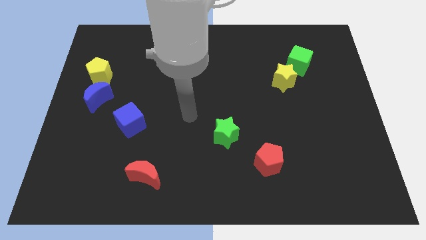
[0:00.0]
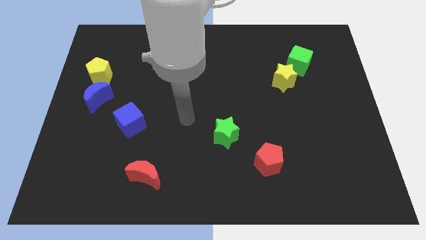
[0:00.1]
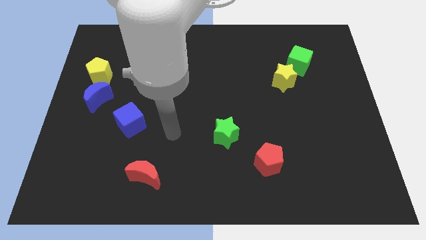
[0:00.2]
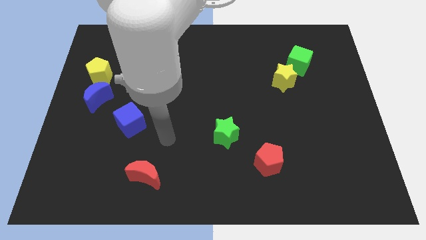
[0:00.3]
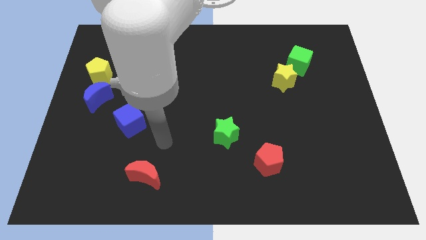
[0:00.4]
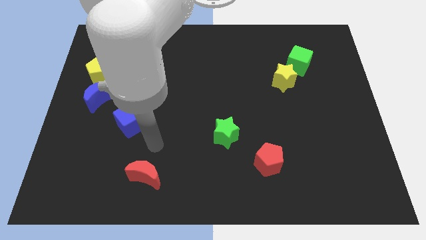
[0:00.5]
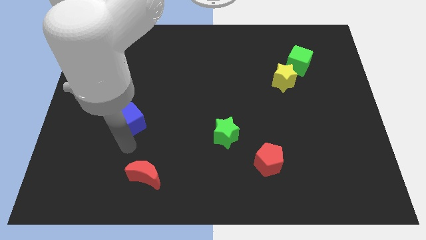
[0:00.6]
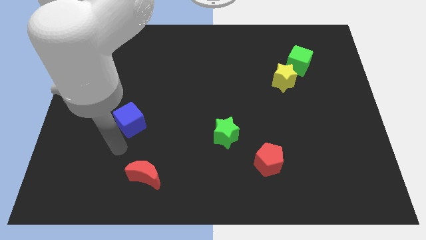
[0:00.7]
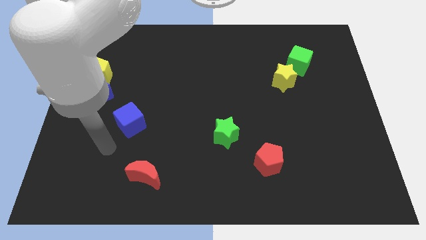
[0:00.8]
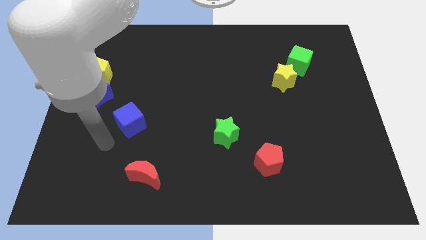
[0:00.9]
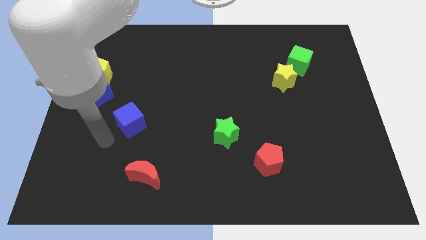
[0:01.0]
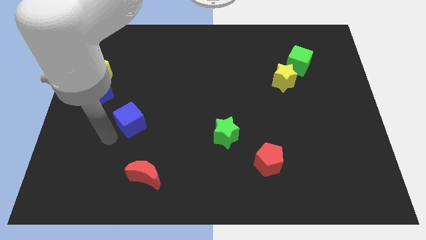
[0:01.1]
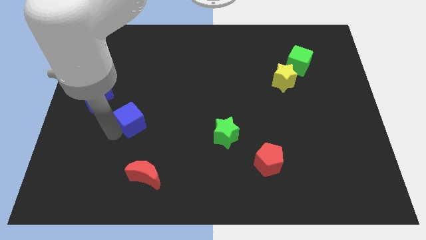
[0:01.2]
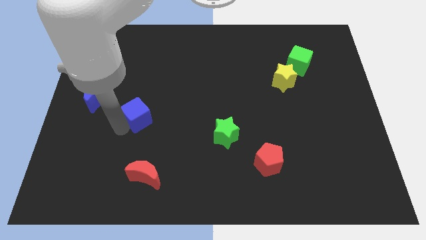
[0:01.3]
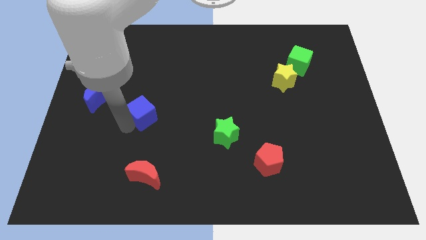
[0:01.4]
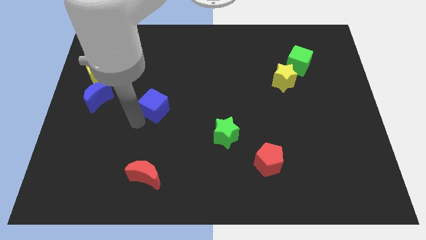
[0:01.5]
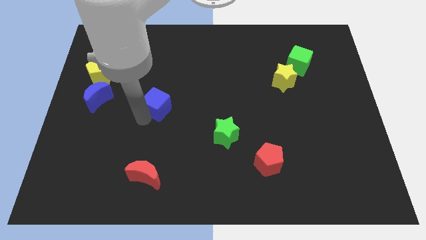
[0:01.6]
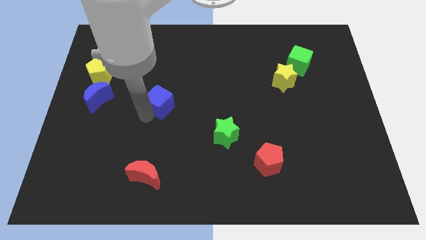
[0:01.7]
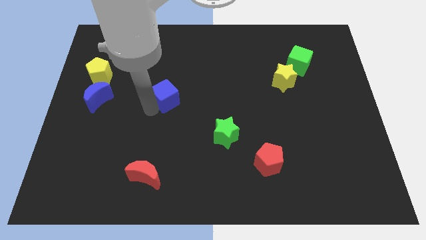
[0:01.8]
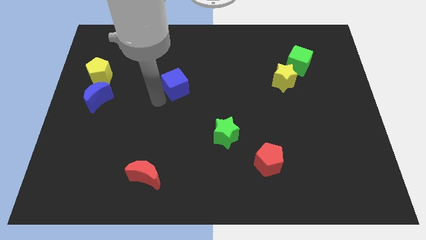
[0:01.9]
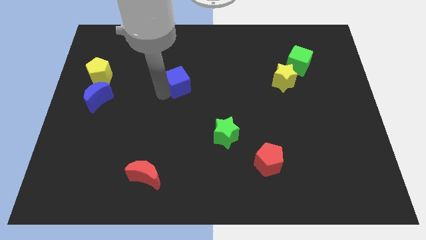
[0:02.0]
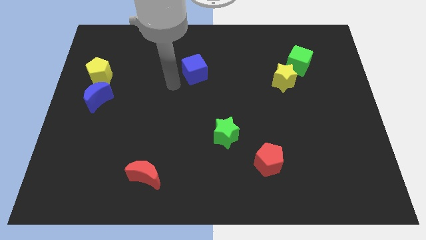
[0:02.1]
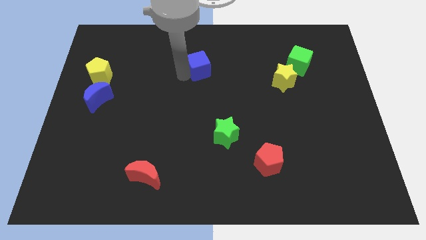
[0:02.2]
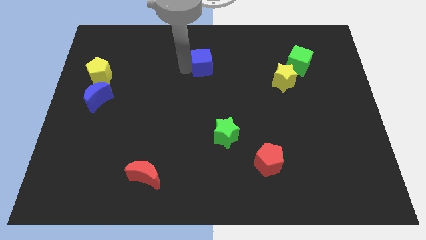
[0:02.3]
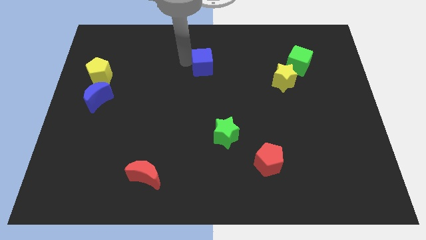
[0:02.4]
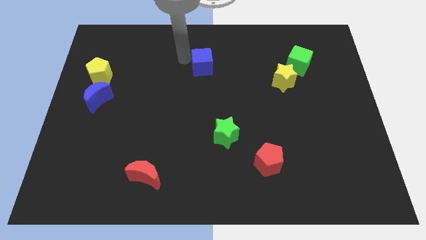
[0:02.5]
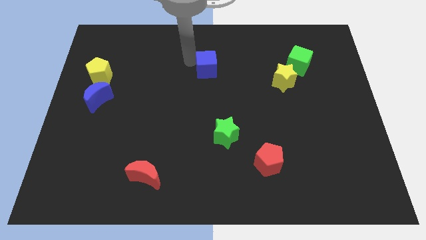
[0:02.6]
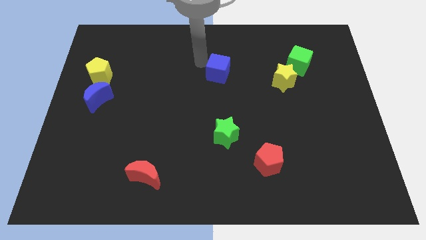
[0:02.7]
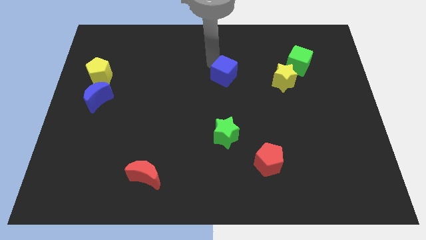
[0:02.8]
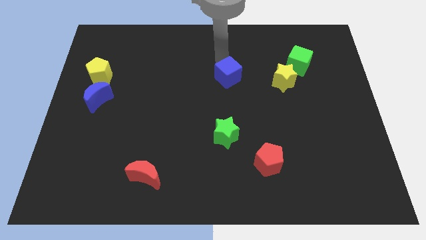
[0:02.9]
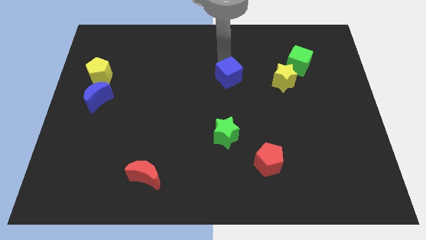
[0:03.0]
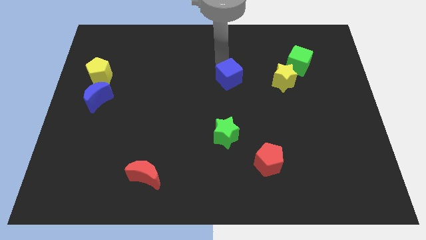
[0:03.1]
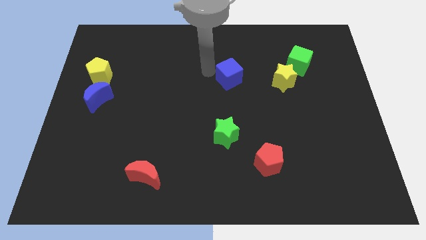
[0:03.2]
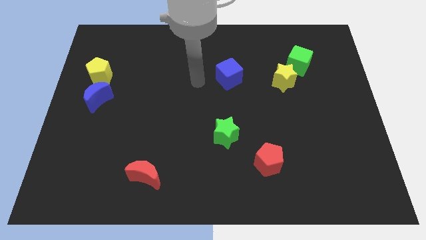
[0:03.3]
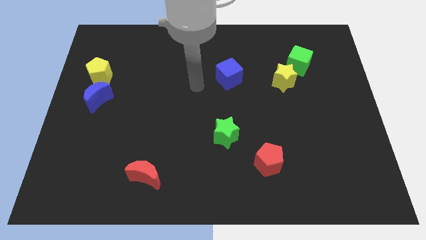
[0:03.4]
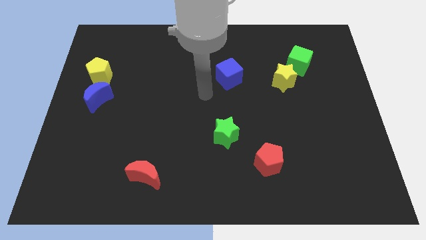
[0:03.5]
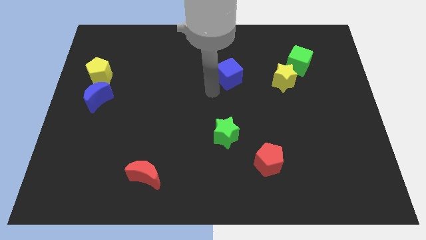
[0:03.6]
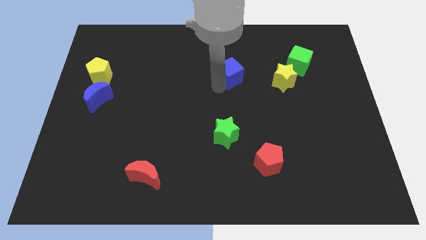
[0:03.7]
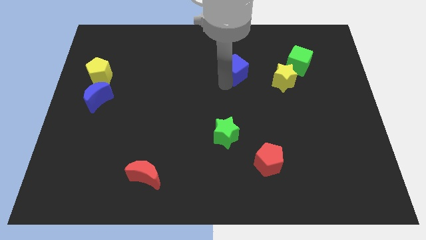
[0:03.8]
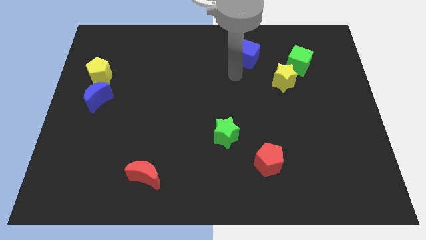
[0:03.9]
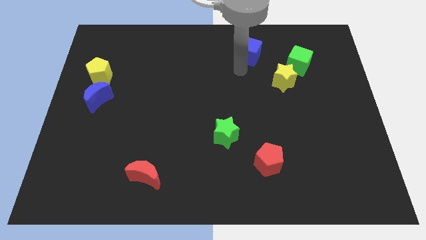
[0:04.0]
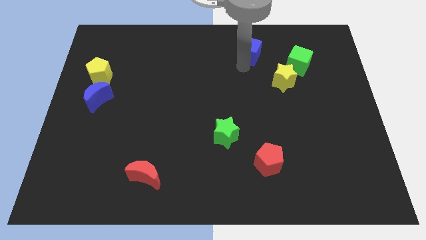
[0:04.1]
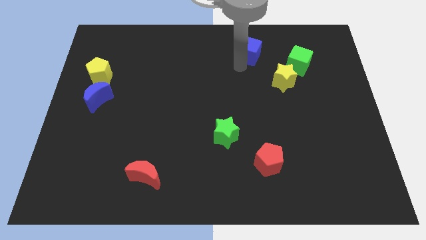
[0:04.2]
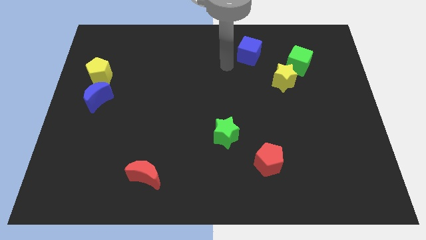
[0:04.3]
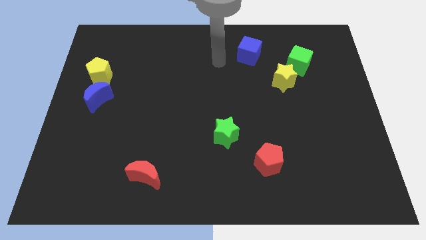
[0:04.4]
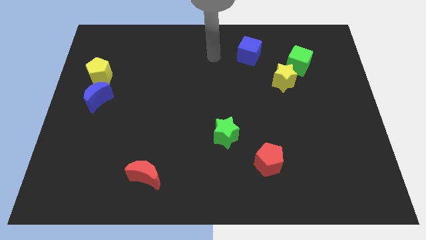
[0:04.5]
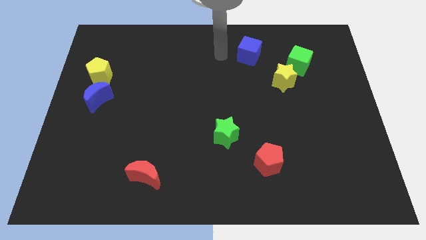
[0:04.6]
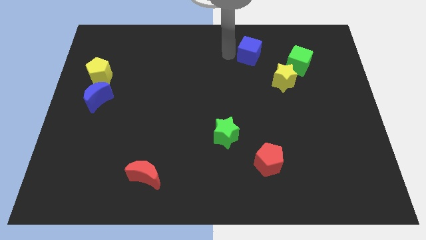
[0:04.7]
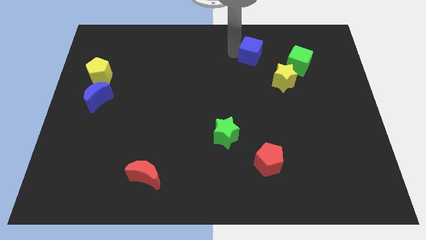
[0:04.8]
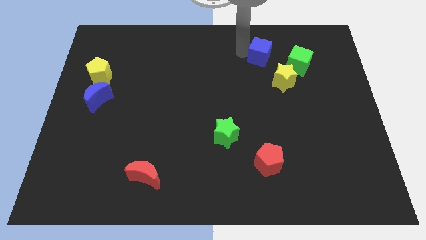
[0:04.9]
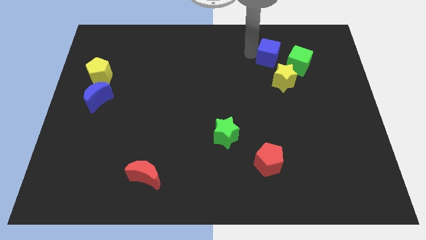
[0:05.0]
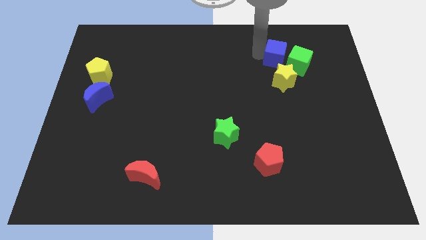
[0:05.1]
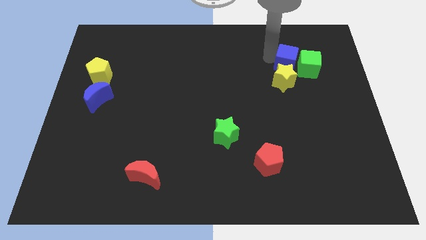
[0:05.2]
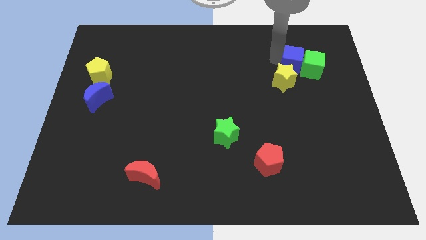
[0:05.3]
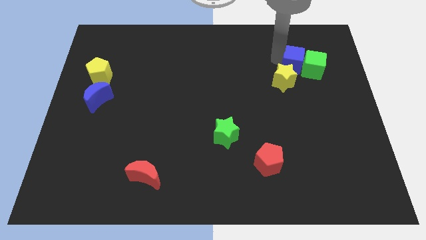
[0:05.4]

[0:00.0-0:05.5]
move the blue cube close to the green cube

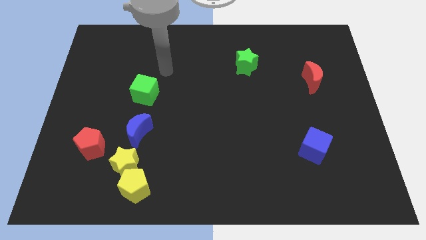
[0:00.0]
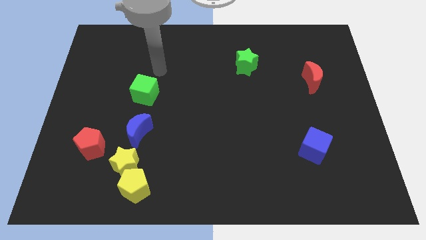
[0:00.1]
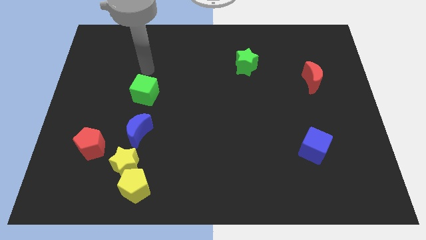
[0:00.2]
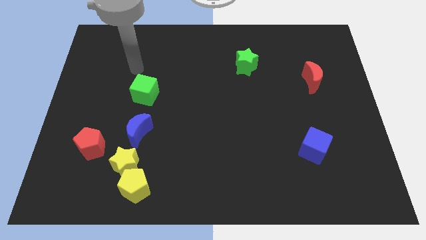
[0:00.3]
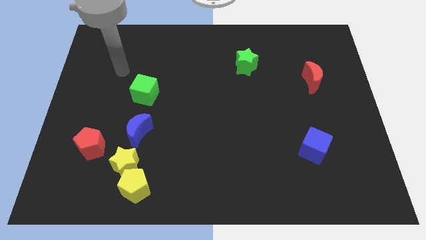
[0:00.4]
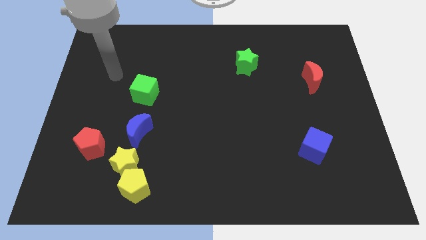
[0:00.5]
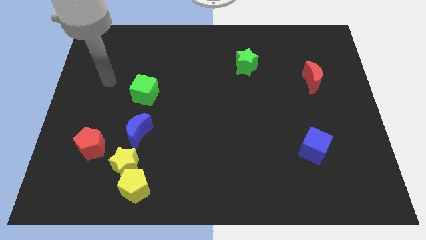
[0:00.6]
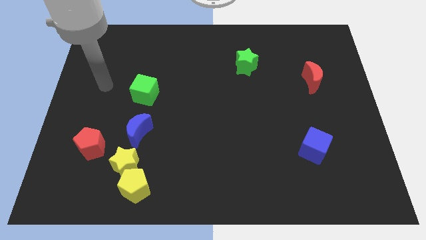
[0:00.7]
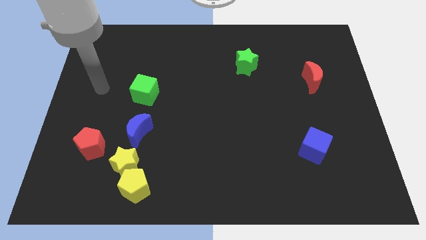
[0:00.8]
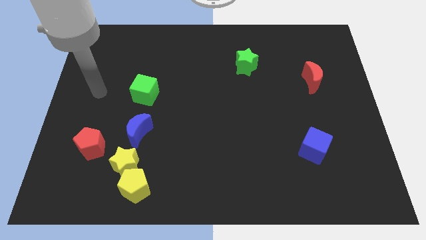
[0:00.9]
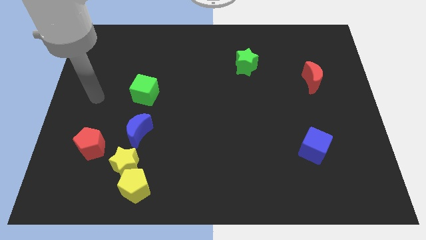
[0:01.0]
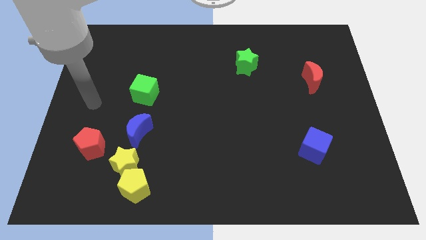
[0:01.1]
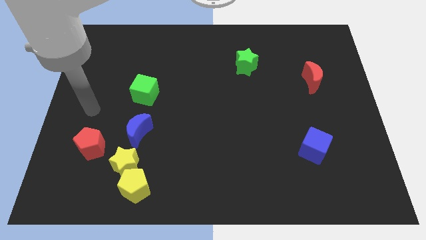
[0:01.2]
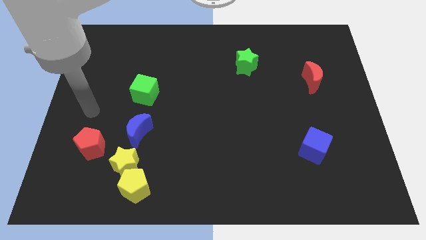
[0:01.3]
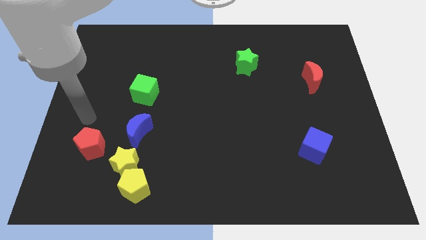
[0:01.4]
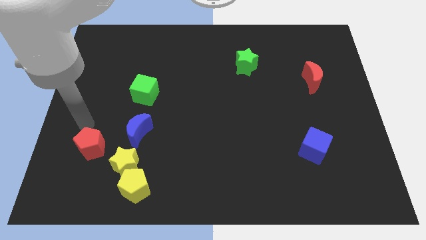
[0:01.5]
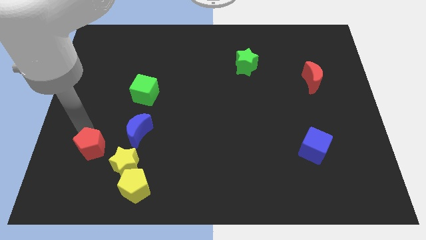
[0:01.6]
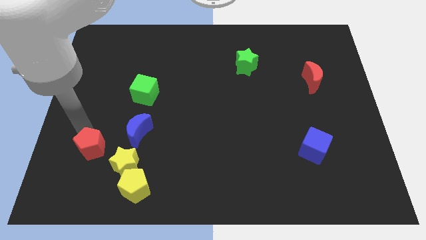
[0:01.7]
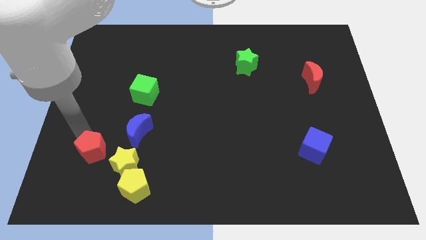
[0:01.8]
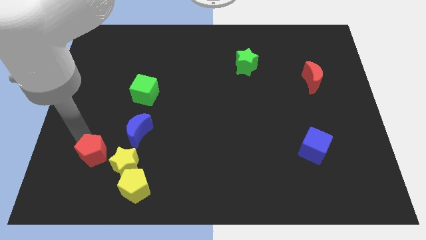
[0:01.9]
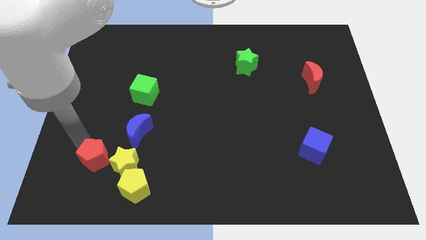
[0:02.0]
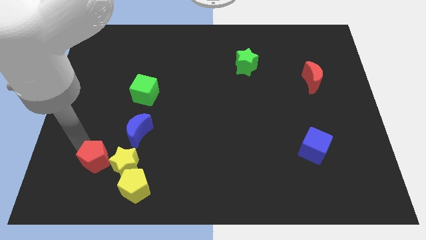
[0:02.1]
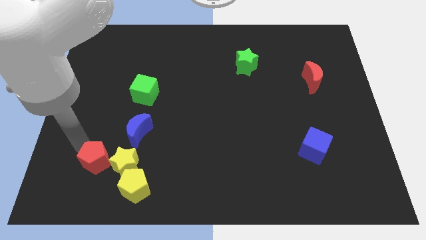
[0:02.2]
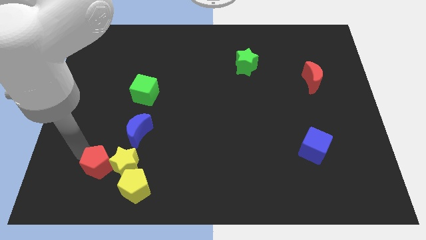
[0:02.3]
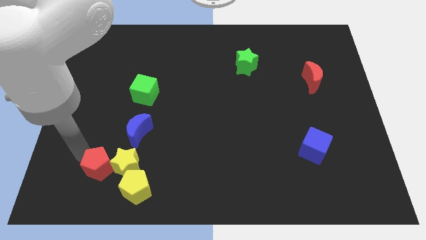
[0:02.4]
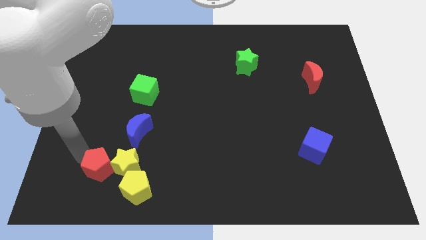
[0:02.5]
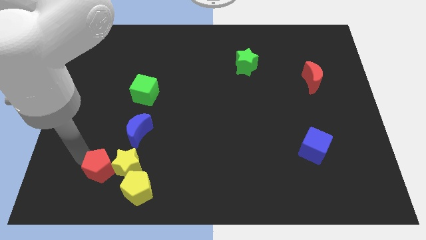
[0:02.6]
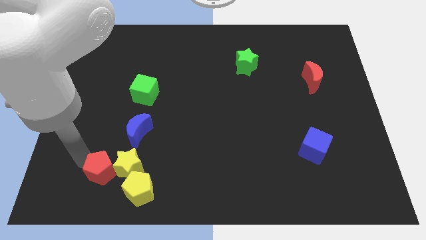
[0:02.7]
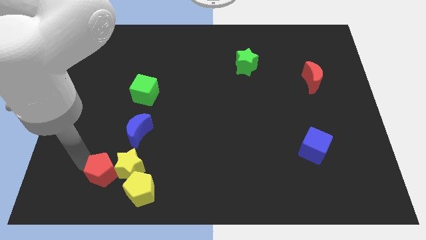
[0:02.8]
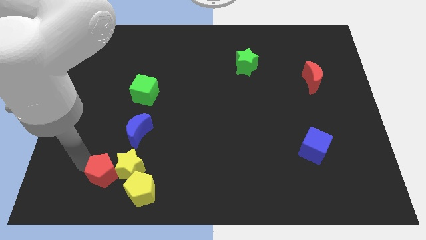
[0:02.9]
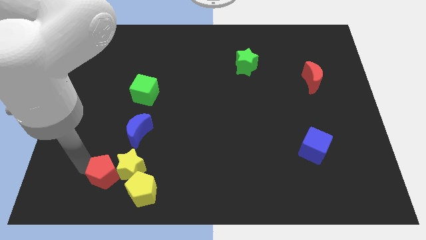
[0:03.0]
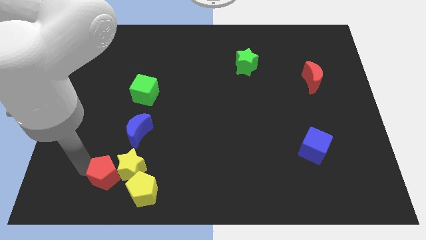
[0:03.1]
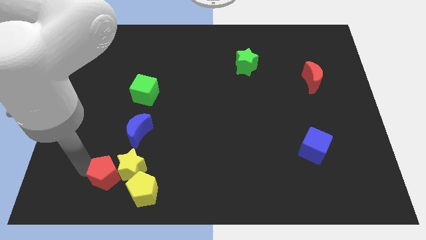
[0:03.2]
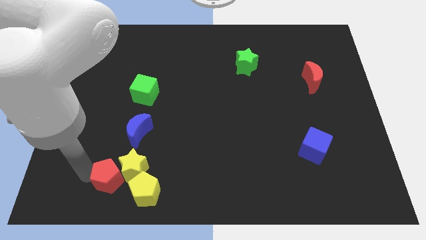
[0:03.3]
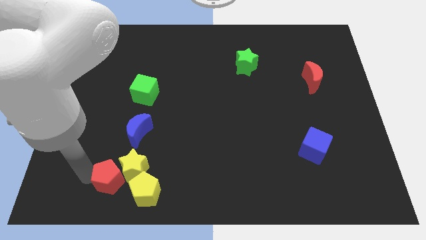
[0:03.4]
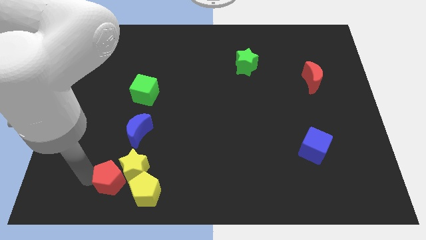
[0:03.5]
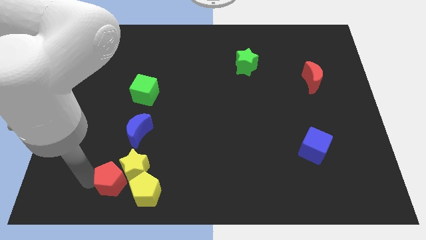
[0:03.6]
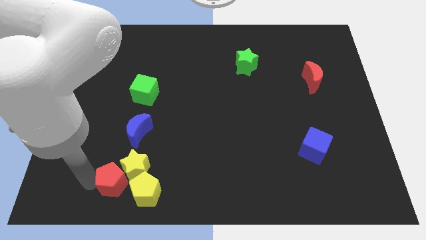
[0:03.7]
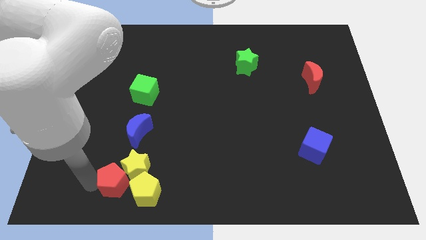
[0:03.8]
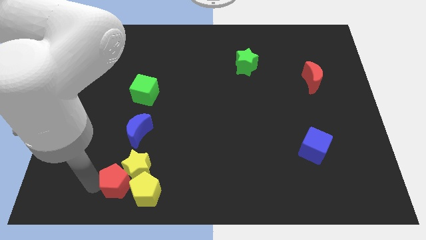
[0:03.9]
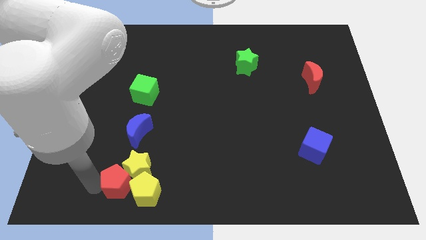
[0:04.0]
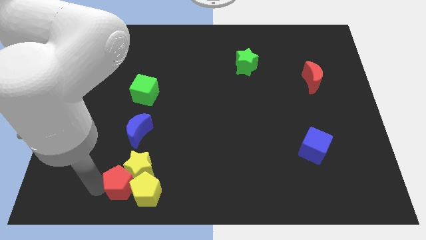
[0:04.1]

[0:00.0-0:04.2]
move the red pentagon close to the yellow pentagon
